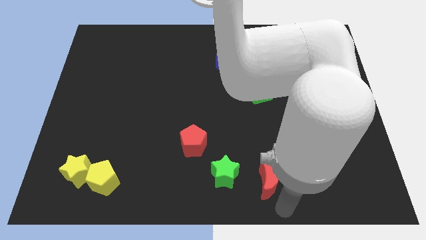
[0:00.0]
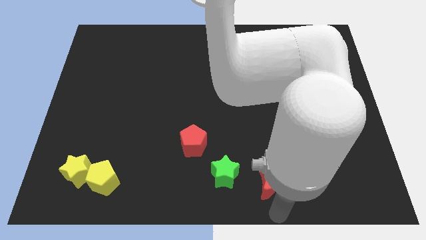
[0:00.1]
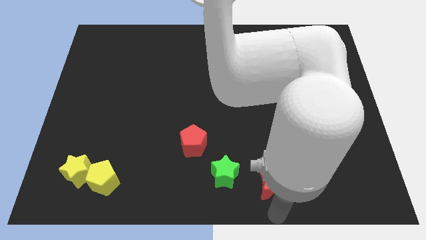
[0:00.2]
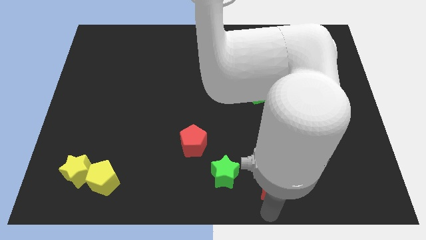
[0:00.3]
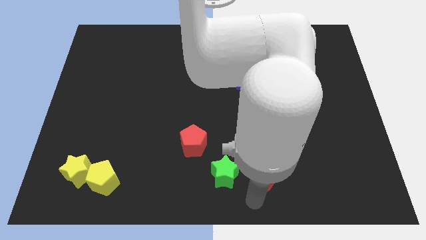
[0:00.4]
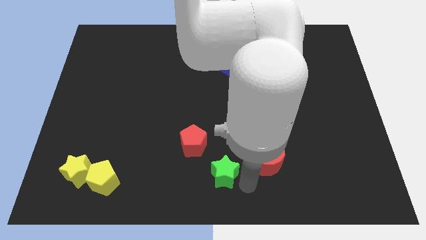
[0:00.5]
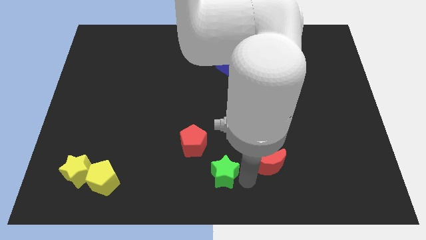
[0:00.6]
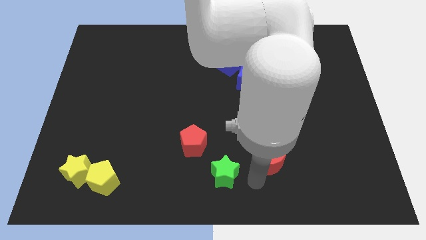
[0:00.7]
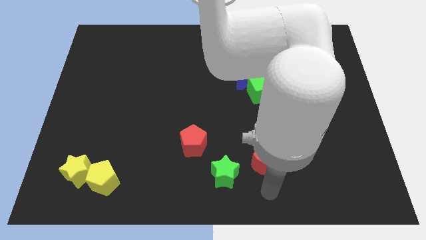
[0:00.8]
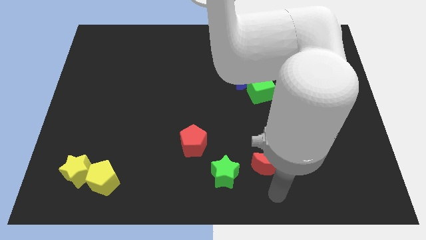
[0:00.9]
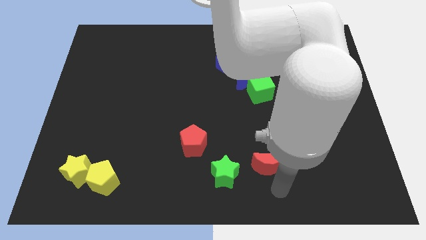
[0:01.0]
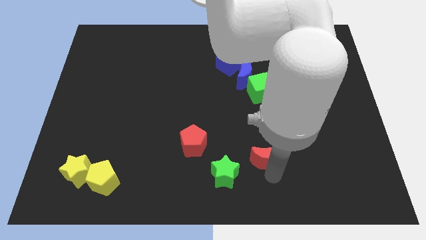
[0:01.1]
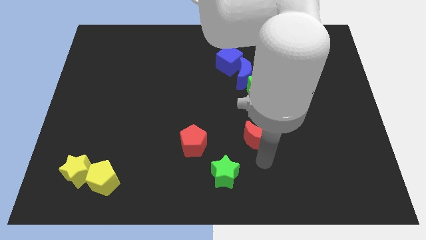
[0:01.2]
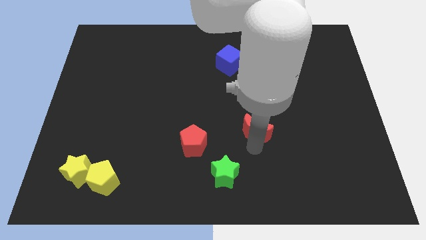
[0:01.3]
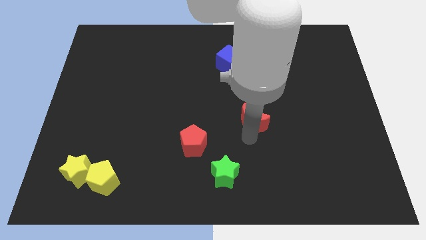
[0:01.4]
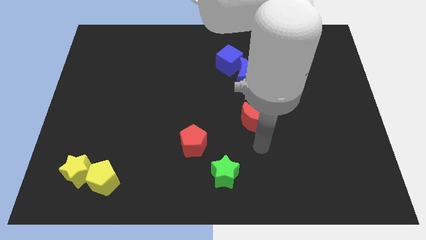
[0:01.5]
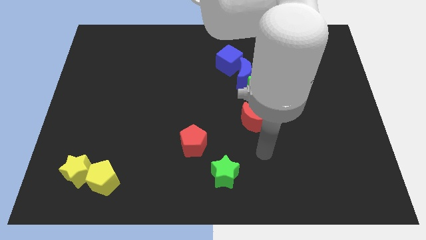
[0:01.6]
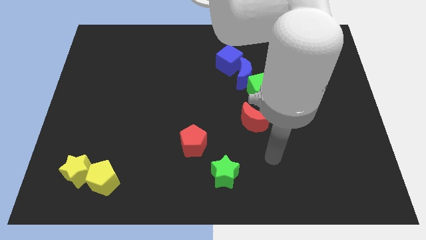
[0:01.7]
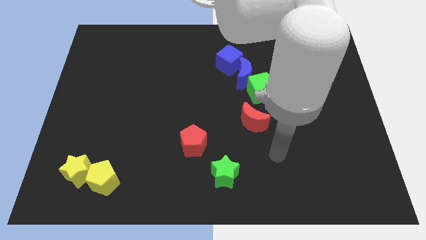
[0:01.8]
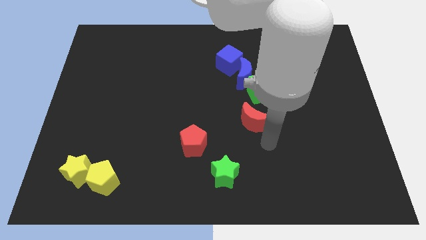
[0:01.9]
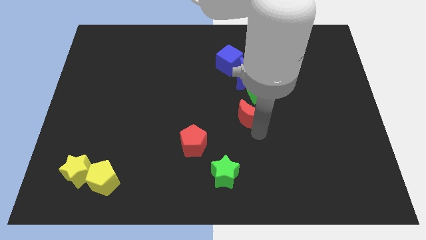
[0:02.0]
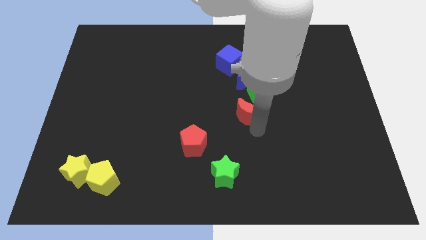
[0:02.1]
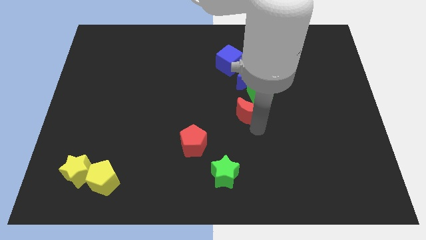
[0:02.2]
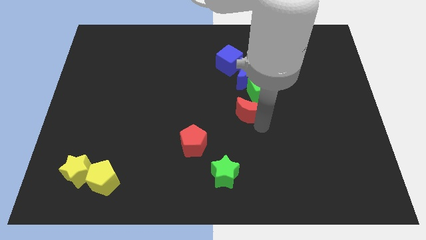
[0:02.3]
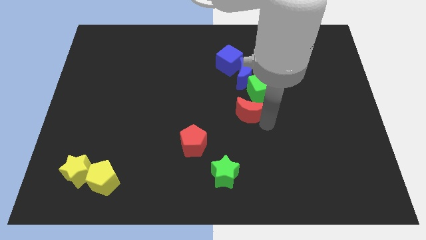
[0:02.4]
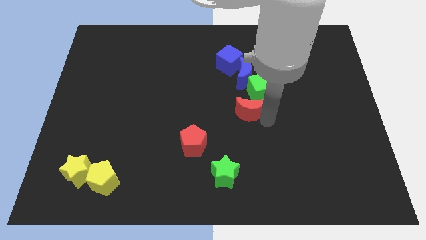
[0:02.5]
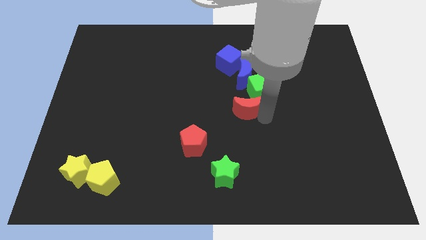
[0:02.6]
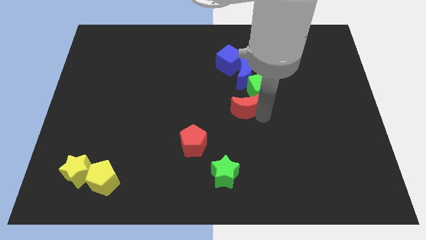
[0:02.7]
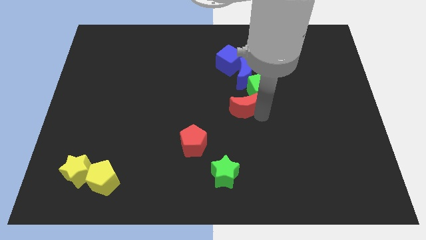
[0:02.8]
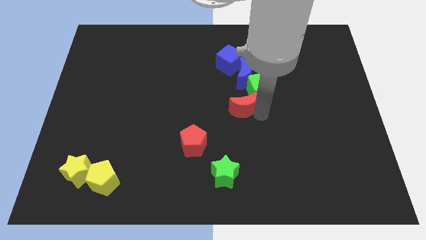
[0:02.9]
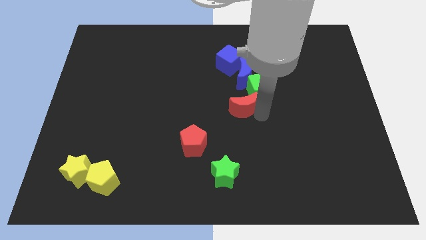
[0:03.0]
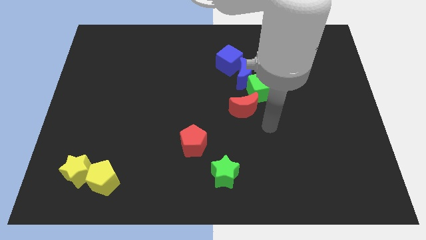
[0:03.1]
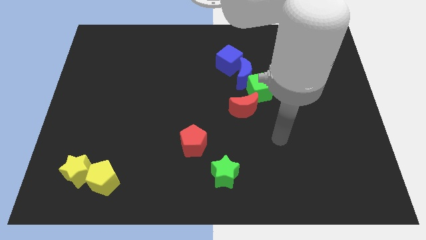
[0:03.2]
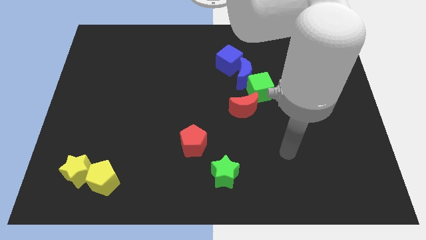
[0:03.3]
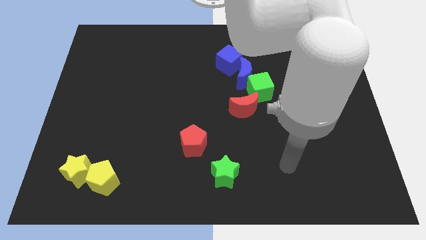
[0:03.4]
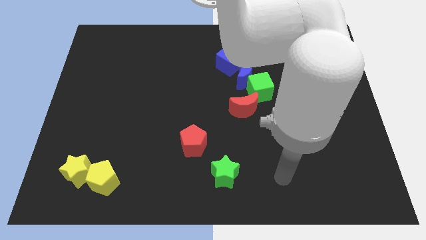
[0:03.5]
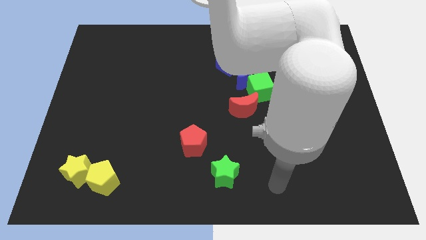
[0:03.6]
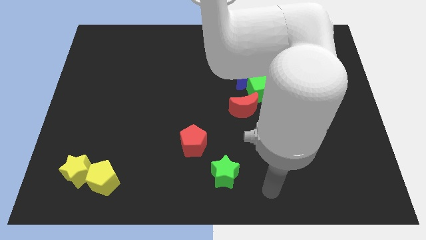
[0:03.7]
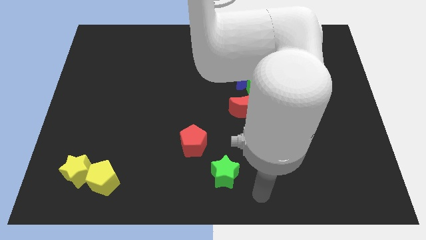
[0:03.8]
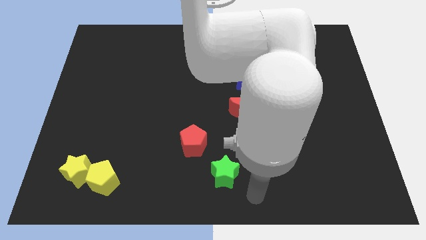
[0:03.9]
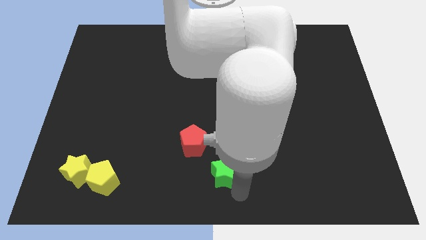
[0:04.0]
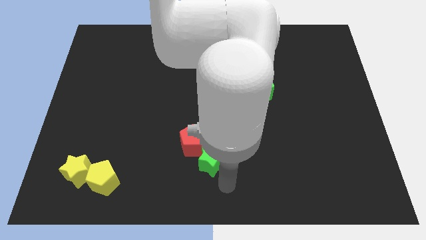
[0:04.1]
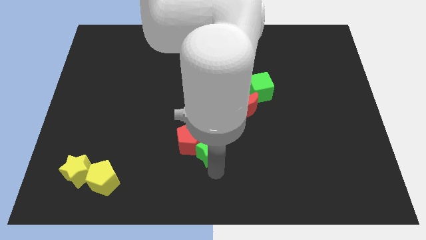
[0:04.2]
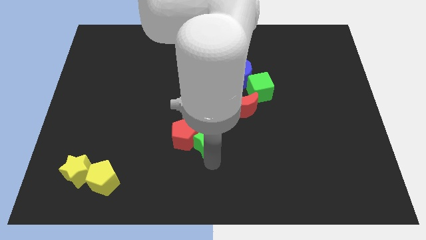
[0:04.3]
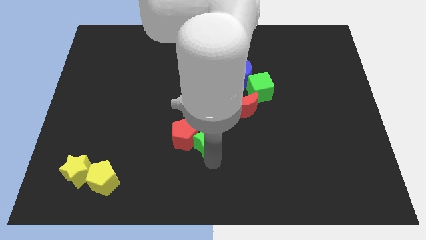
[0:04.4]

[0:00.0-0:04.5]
push green star near red pentagon

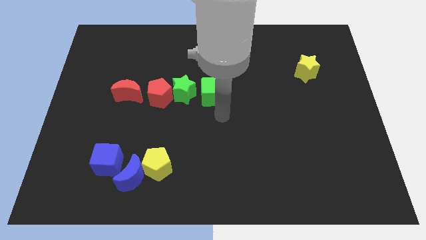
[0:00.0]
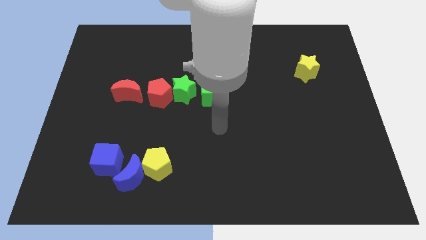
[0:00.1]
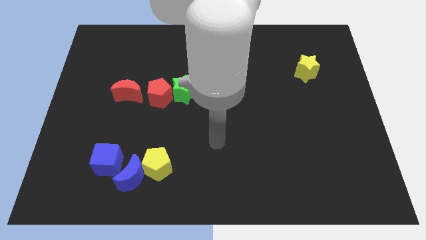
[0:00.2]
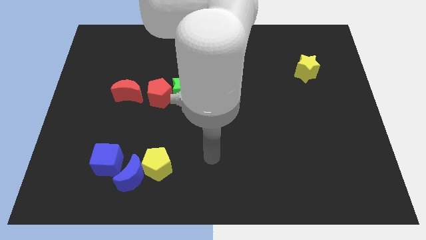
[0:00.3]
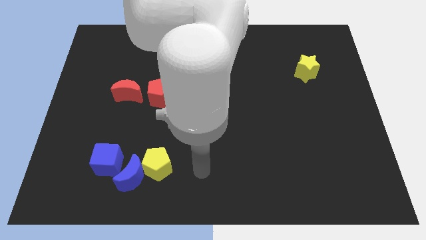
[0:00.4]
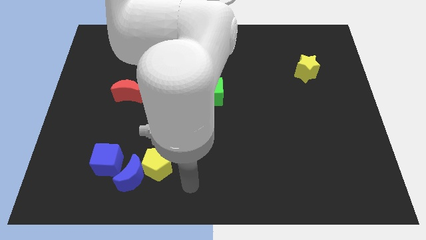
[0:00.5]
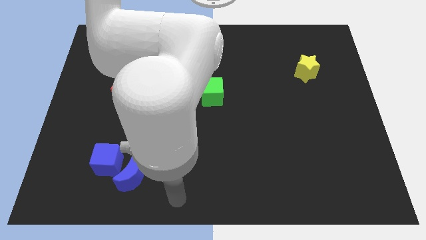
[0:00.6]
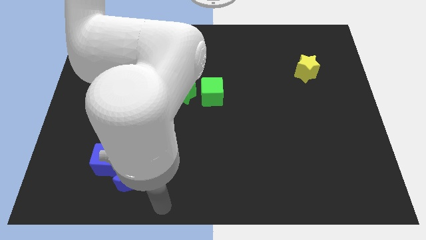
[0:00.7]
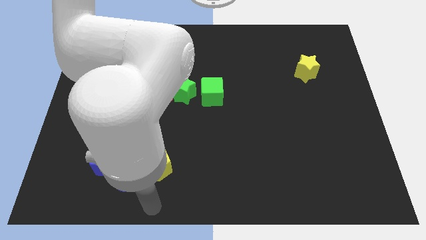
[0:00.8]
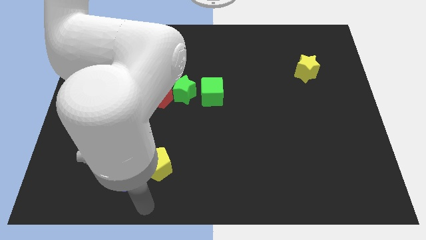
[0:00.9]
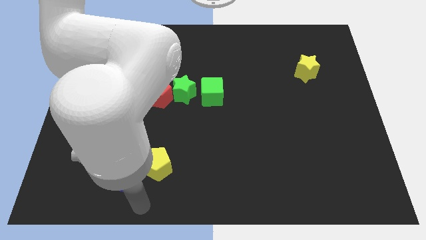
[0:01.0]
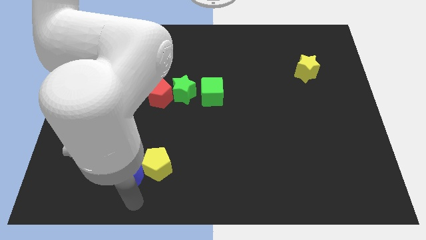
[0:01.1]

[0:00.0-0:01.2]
move your arm close to the blue crescent

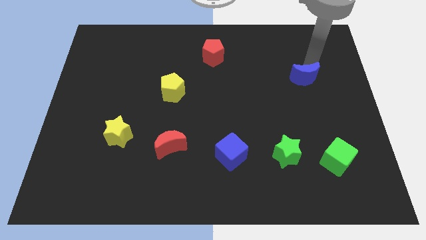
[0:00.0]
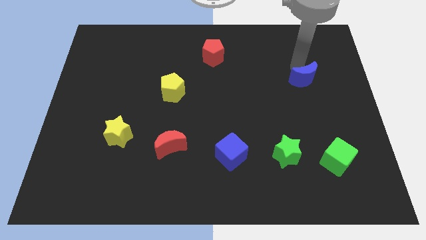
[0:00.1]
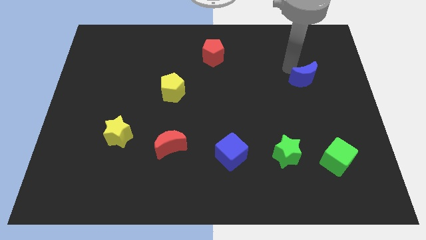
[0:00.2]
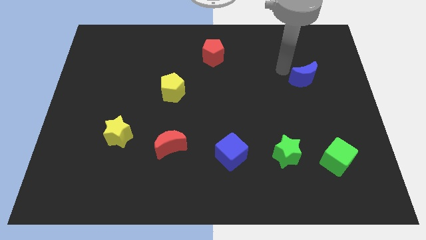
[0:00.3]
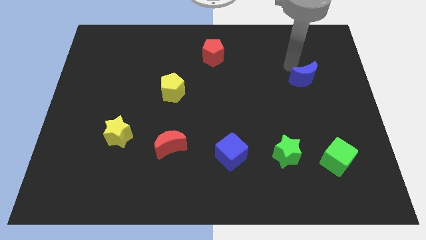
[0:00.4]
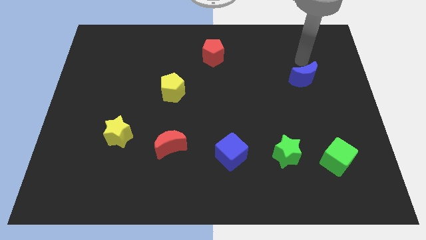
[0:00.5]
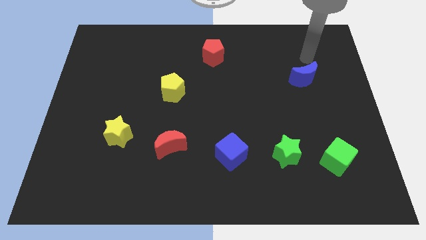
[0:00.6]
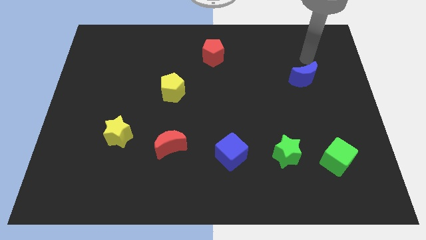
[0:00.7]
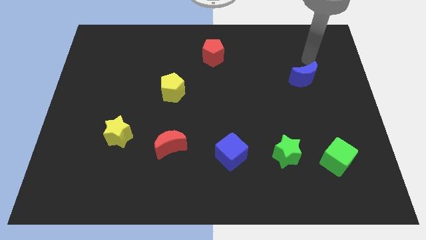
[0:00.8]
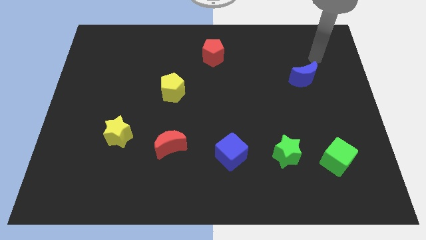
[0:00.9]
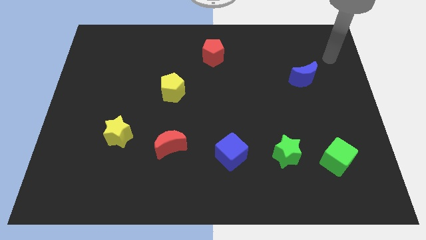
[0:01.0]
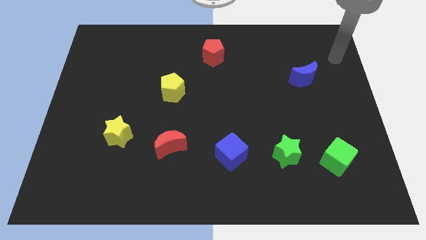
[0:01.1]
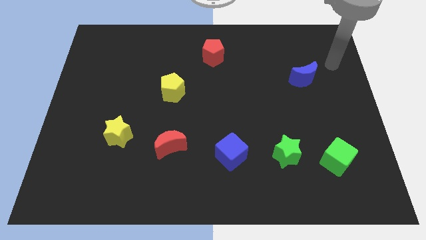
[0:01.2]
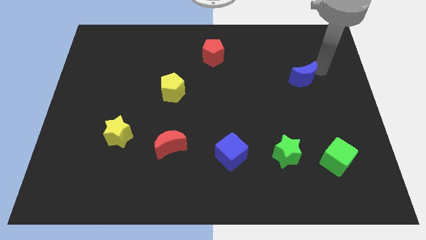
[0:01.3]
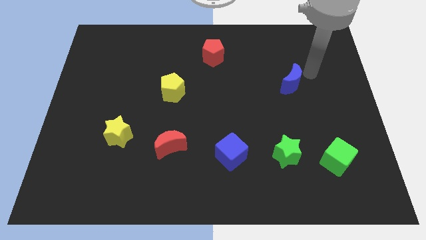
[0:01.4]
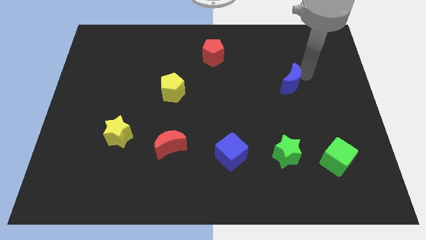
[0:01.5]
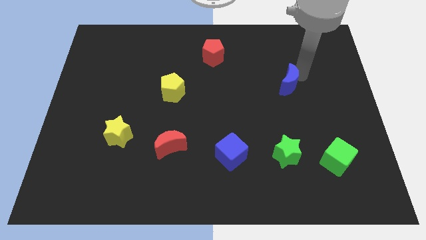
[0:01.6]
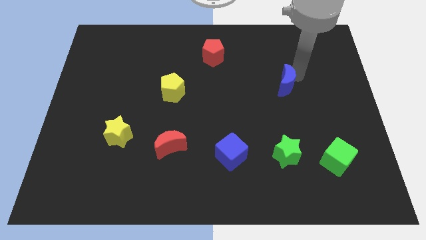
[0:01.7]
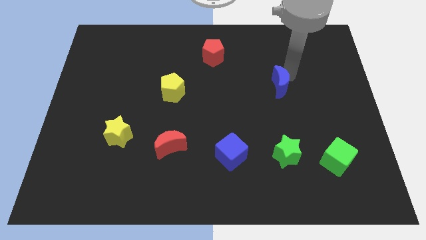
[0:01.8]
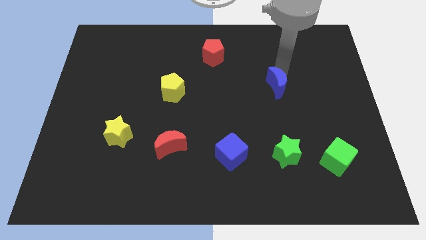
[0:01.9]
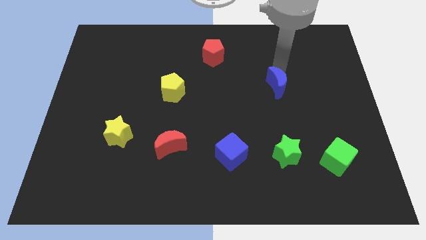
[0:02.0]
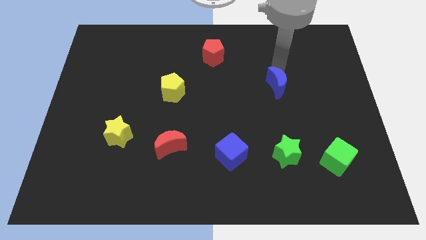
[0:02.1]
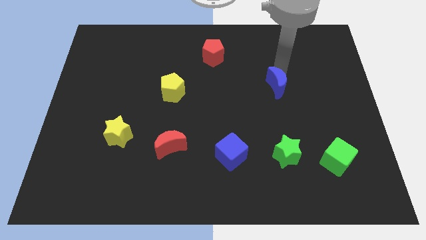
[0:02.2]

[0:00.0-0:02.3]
move the blue moon slightly left

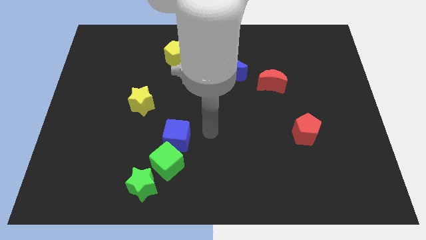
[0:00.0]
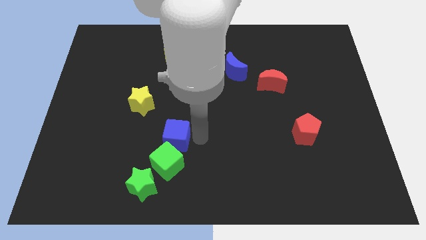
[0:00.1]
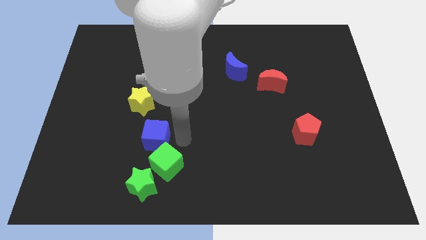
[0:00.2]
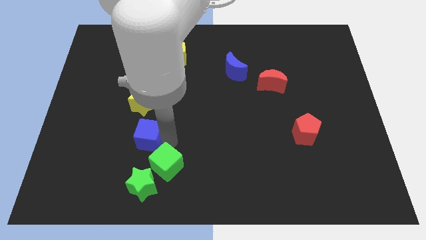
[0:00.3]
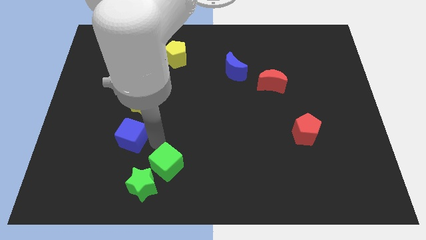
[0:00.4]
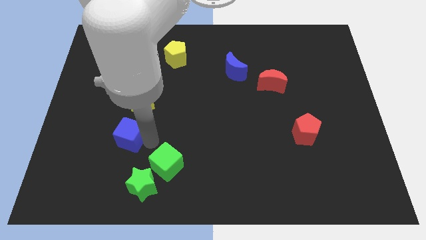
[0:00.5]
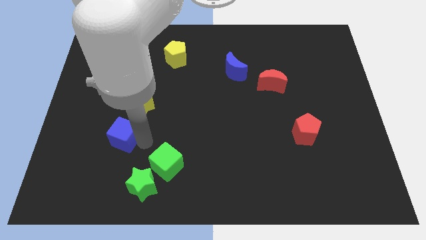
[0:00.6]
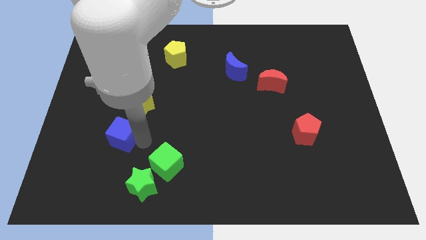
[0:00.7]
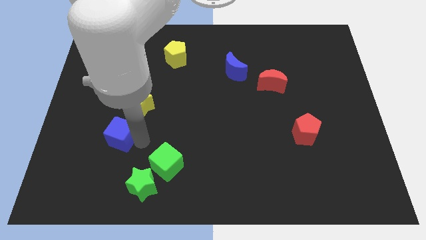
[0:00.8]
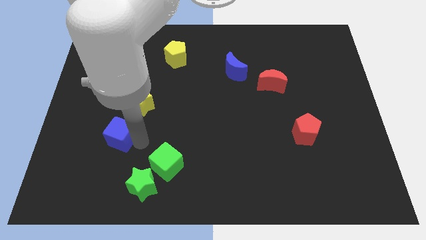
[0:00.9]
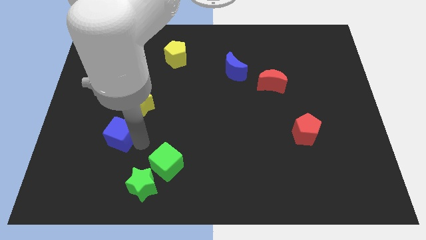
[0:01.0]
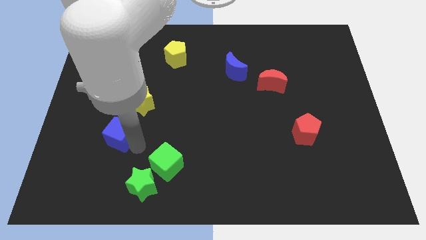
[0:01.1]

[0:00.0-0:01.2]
move the blue cube to the left of the board
